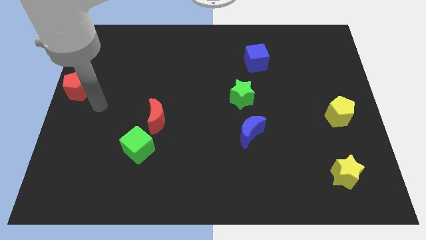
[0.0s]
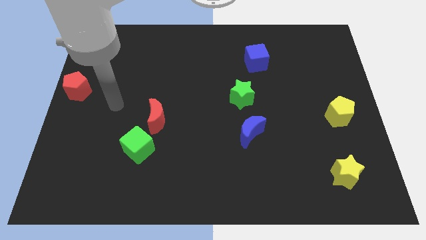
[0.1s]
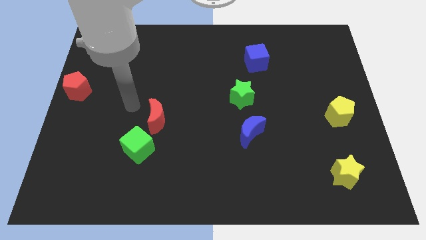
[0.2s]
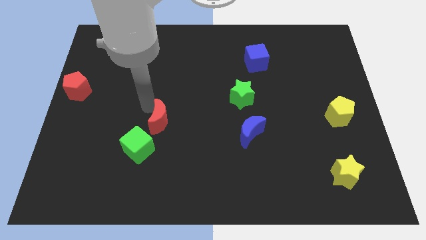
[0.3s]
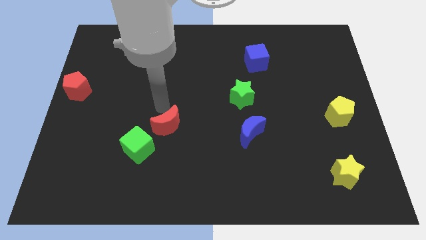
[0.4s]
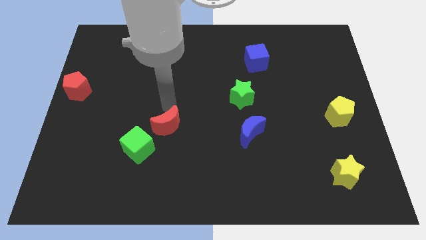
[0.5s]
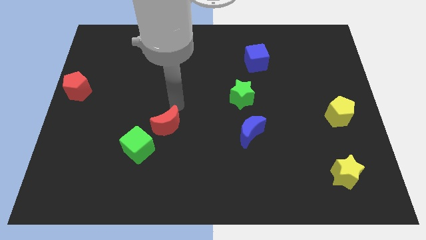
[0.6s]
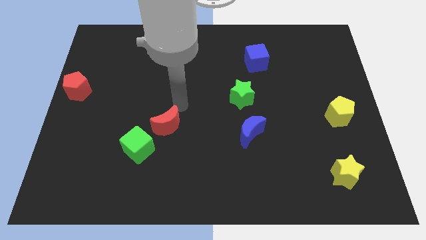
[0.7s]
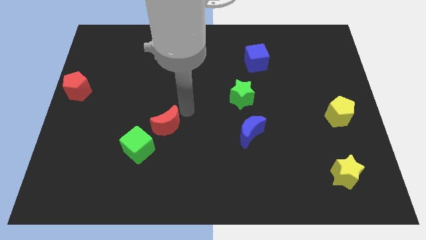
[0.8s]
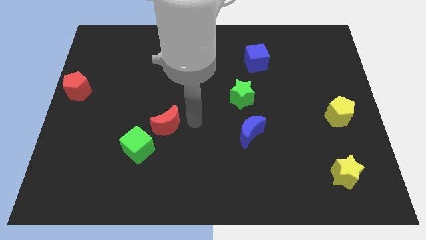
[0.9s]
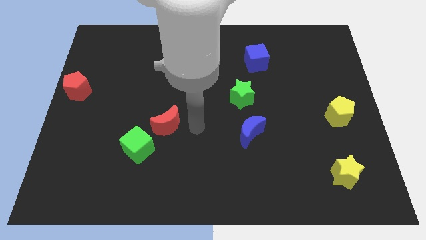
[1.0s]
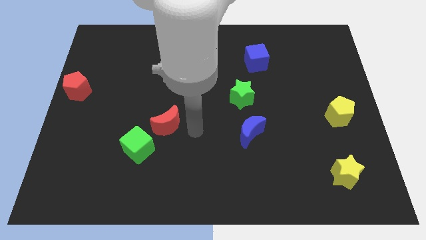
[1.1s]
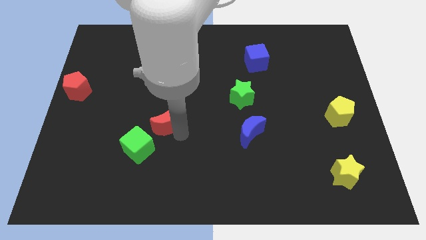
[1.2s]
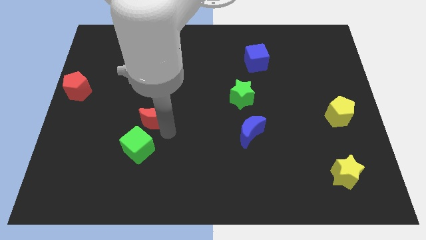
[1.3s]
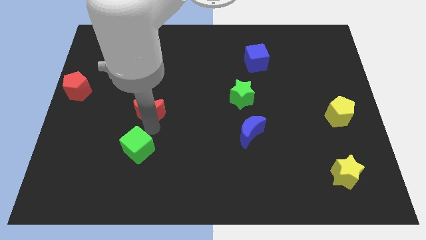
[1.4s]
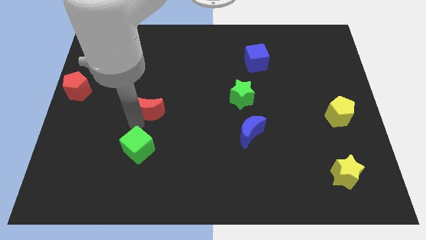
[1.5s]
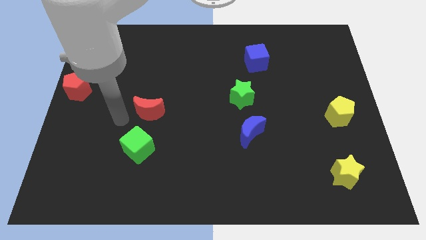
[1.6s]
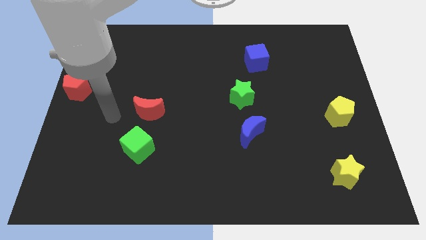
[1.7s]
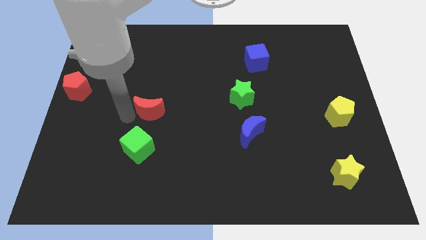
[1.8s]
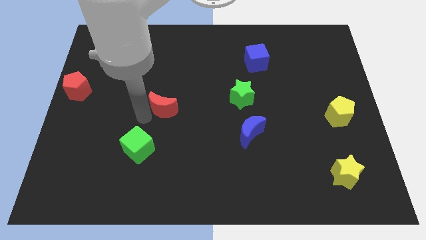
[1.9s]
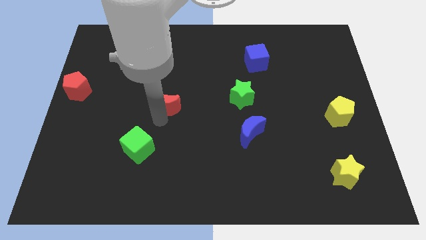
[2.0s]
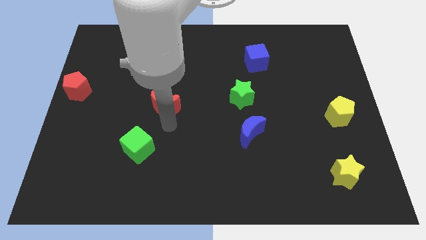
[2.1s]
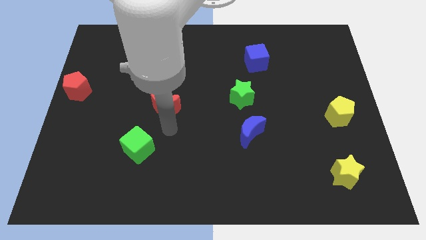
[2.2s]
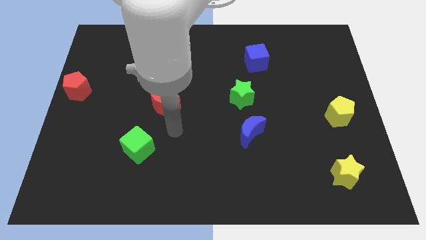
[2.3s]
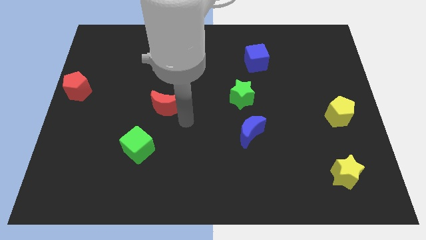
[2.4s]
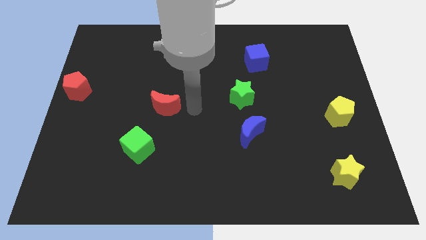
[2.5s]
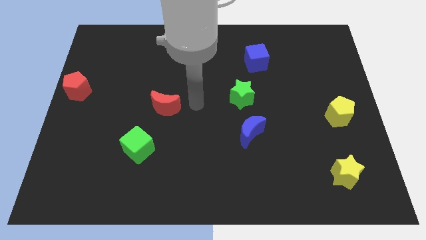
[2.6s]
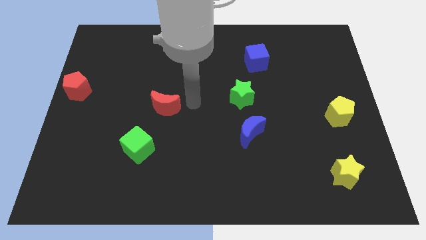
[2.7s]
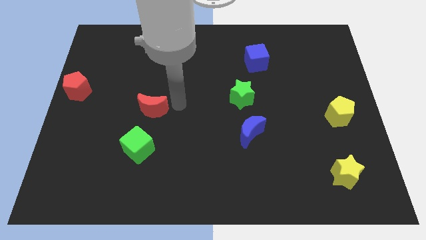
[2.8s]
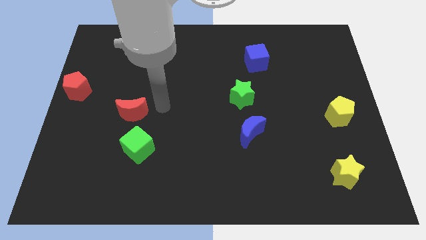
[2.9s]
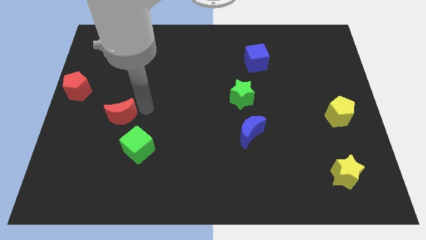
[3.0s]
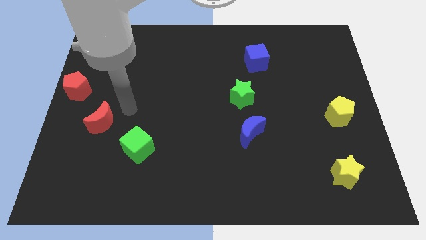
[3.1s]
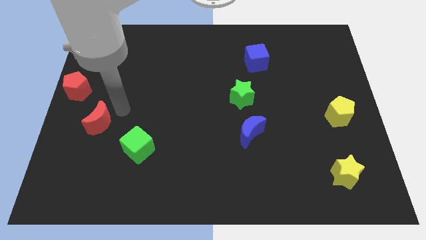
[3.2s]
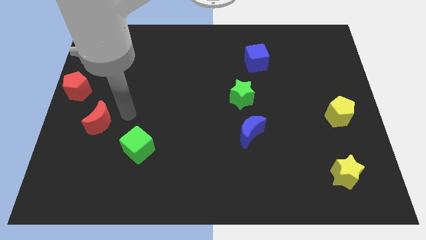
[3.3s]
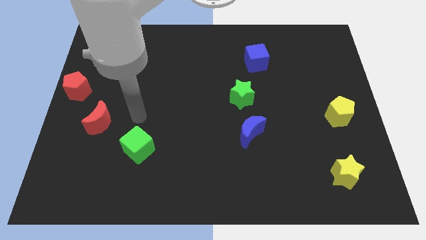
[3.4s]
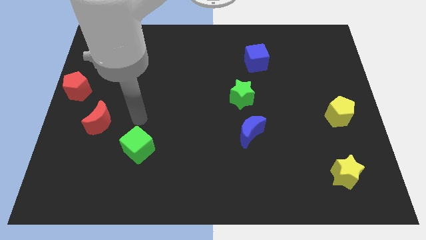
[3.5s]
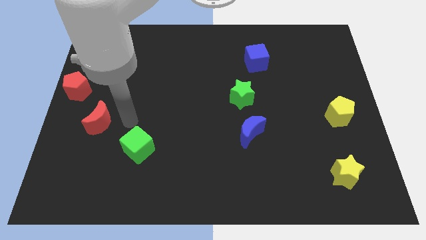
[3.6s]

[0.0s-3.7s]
place the red crescent in between the red pentagon and green cube

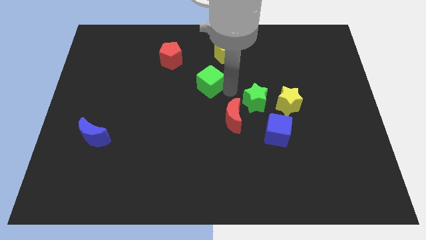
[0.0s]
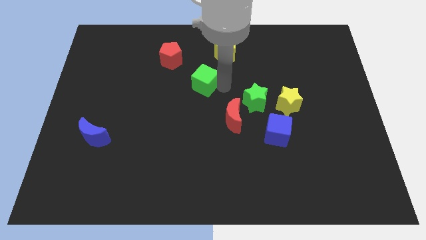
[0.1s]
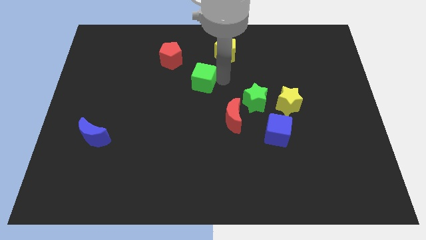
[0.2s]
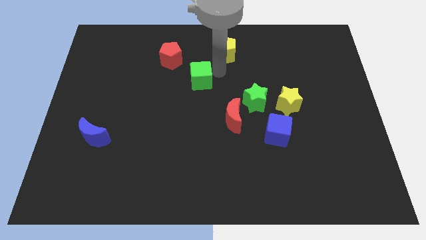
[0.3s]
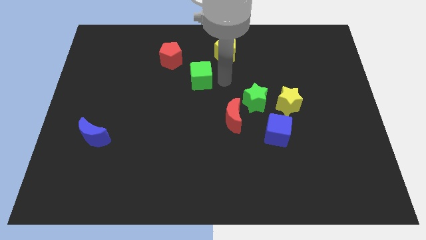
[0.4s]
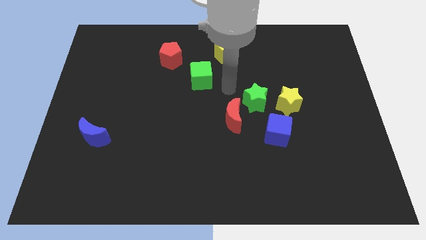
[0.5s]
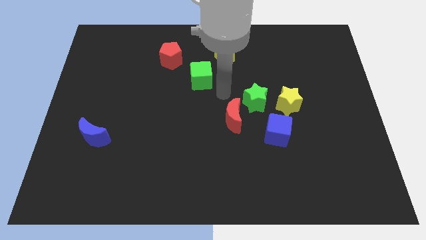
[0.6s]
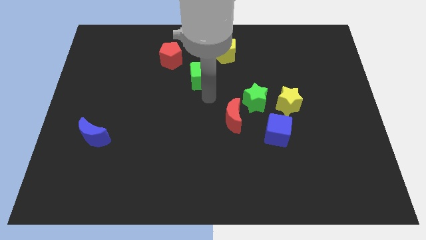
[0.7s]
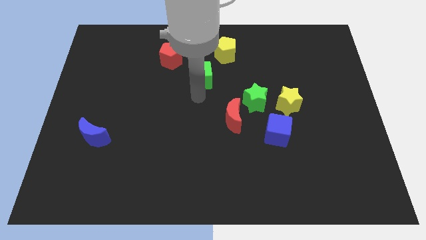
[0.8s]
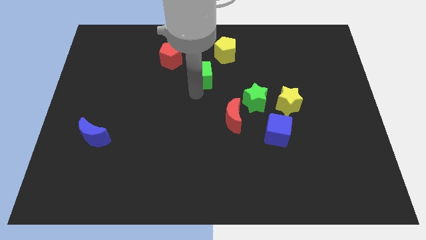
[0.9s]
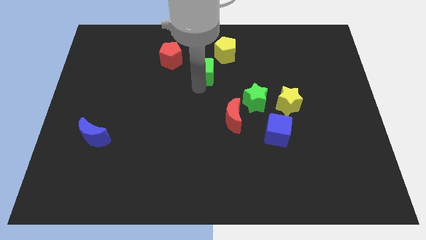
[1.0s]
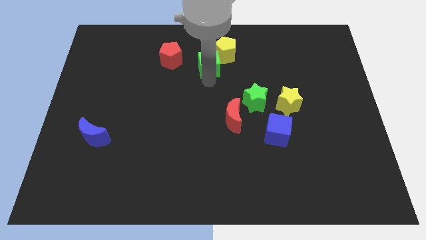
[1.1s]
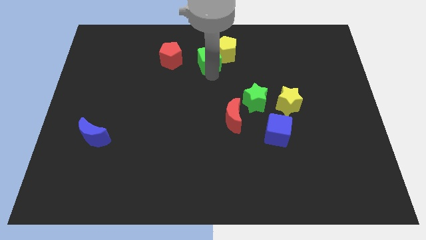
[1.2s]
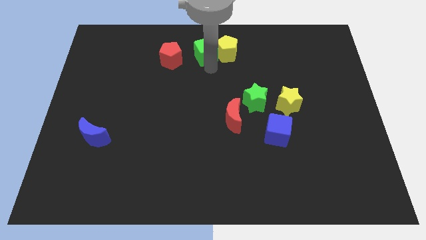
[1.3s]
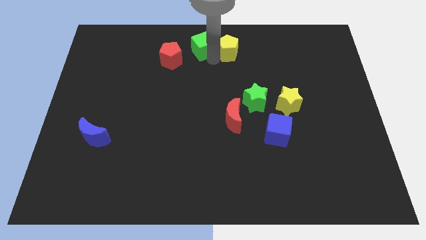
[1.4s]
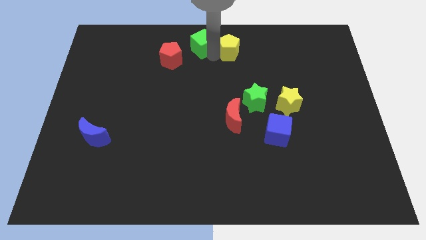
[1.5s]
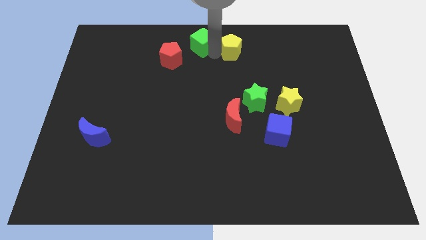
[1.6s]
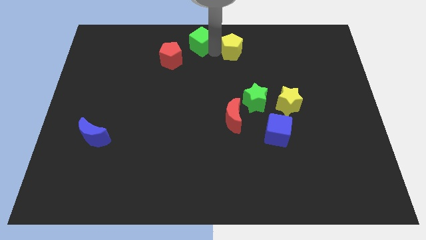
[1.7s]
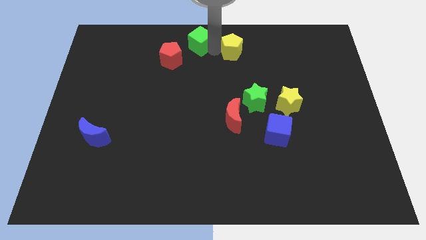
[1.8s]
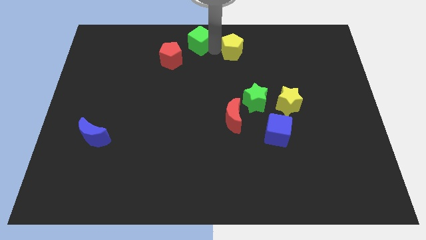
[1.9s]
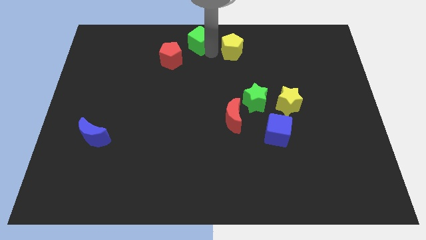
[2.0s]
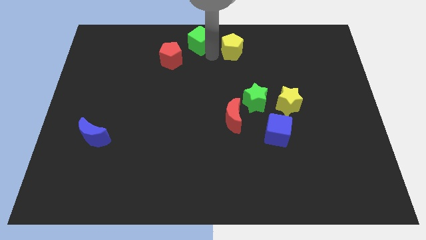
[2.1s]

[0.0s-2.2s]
place the green cube to the left side of the yellow pentagon

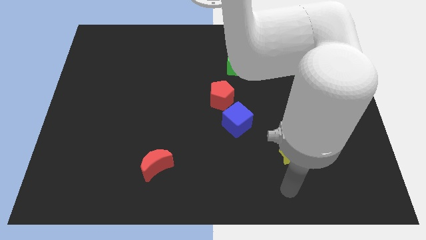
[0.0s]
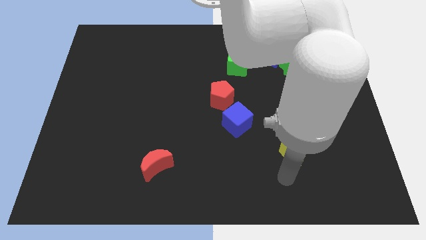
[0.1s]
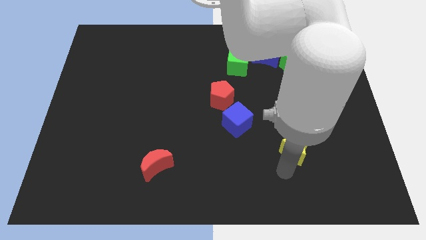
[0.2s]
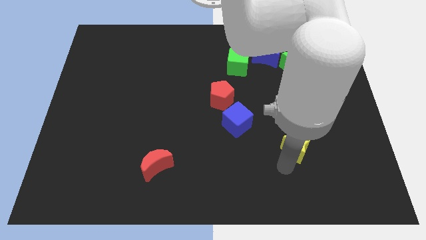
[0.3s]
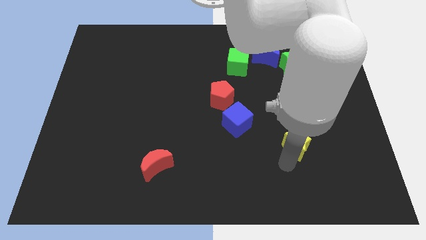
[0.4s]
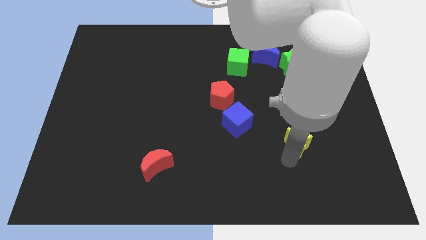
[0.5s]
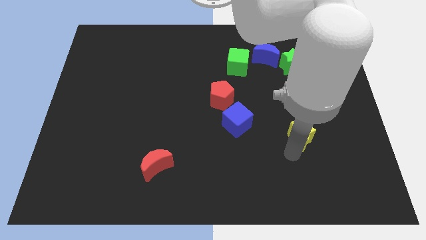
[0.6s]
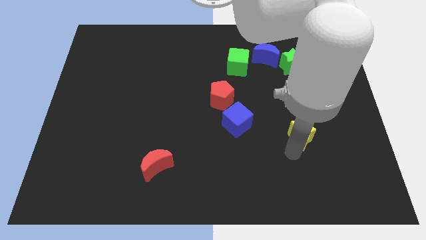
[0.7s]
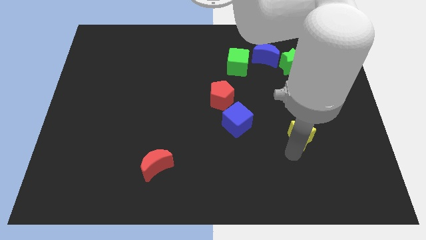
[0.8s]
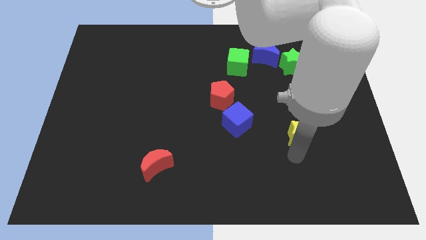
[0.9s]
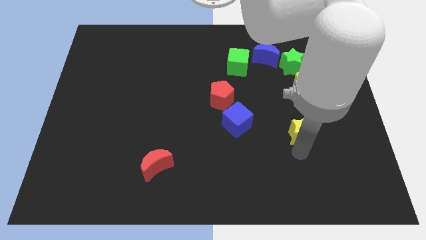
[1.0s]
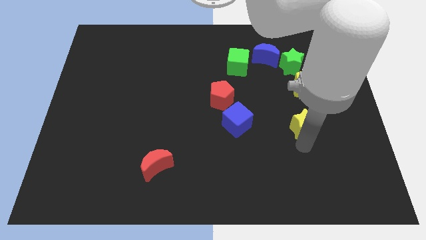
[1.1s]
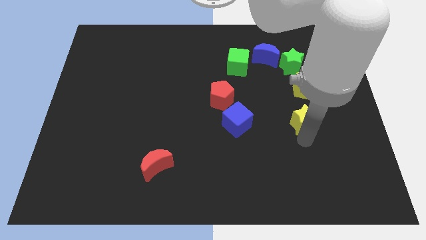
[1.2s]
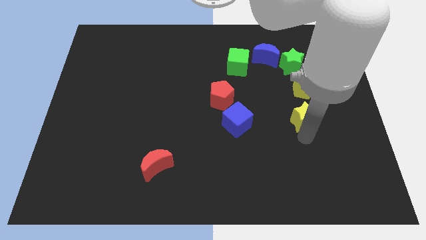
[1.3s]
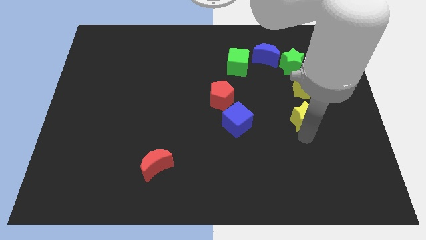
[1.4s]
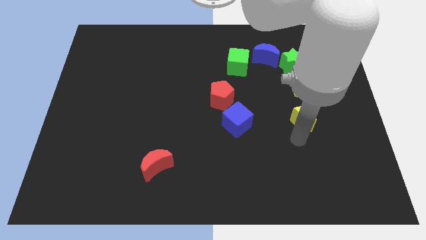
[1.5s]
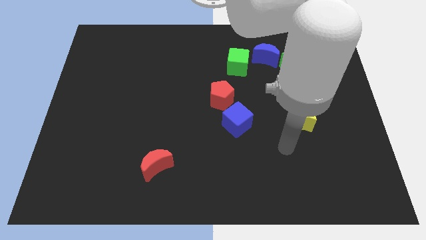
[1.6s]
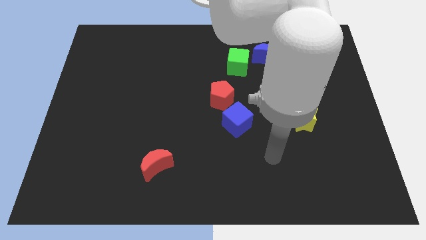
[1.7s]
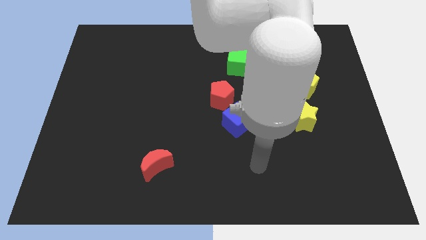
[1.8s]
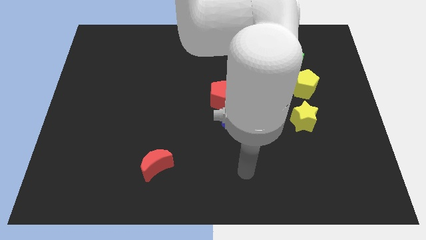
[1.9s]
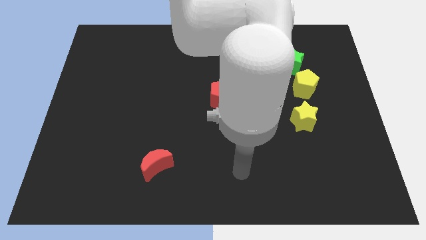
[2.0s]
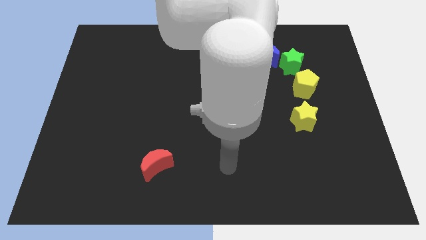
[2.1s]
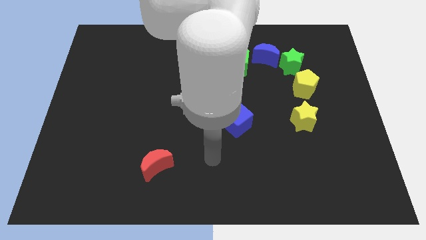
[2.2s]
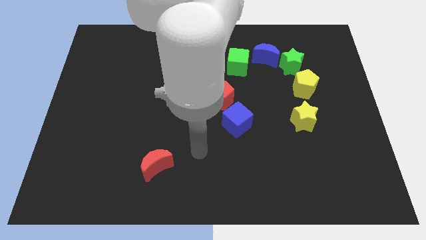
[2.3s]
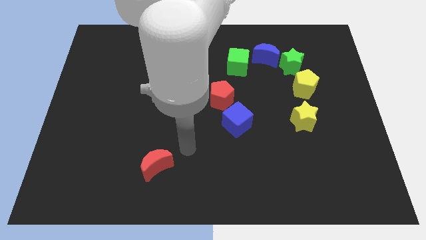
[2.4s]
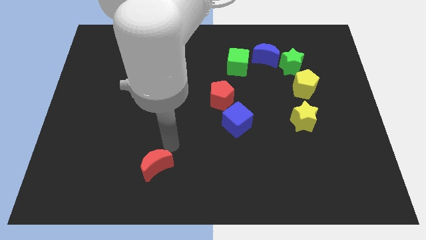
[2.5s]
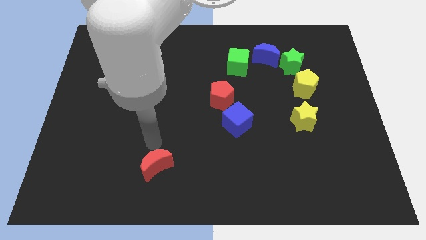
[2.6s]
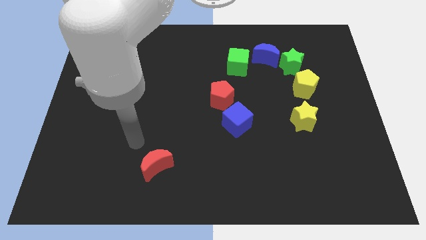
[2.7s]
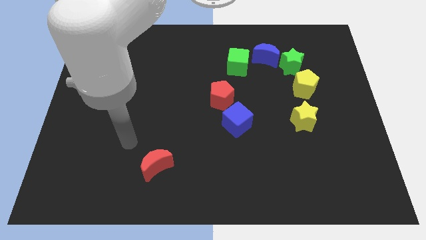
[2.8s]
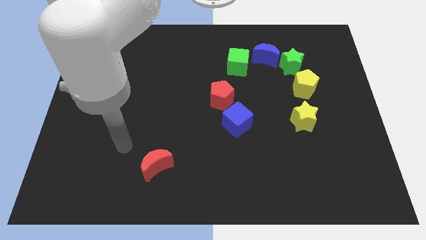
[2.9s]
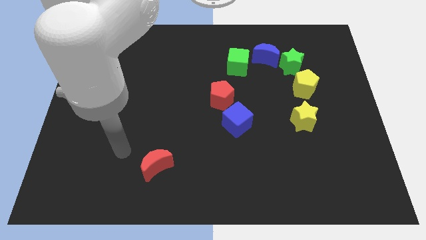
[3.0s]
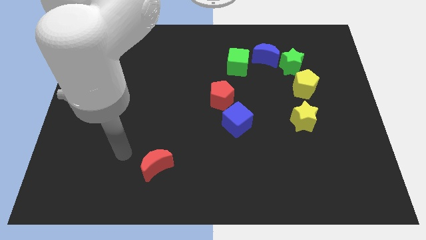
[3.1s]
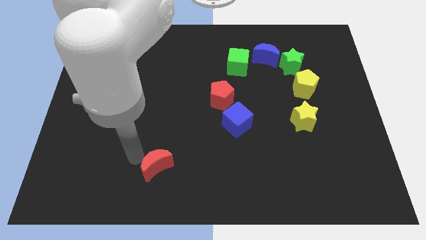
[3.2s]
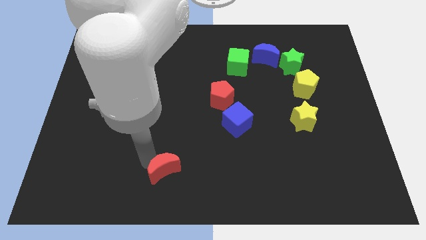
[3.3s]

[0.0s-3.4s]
place yellow star below yellow pentagon
